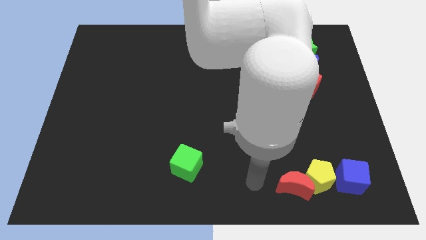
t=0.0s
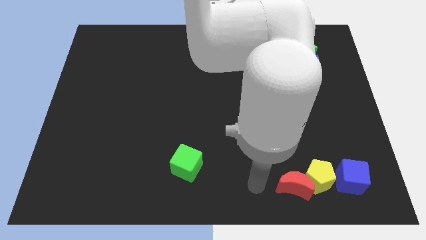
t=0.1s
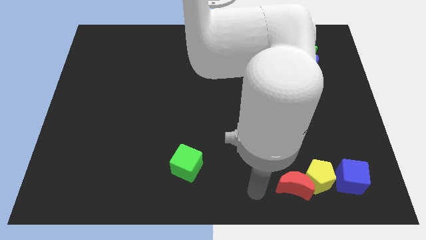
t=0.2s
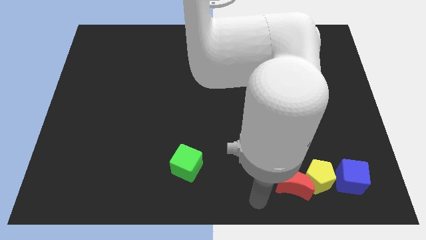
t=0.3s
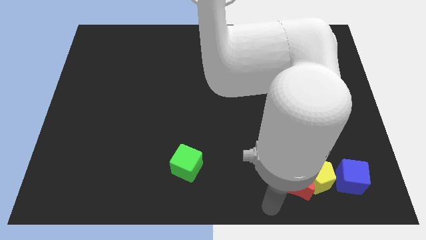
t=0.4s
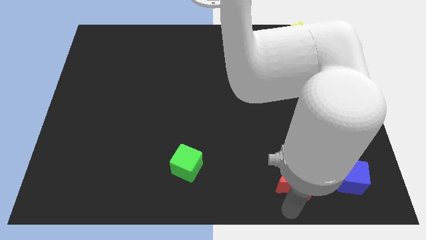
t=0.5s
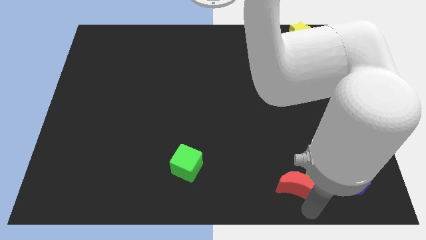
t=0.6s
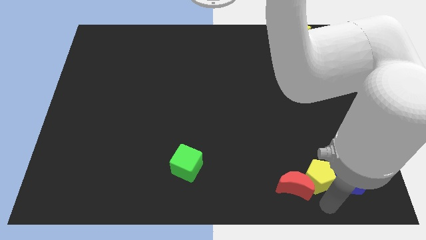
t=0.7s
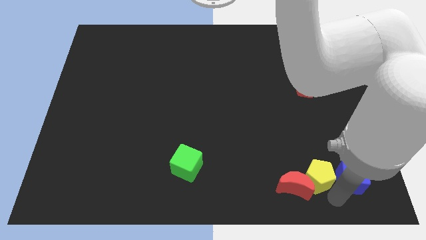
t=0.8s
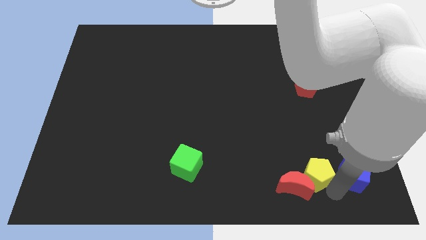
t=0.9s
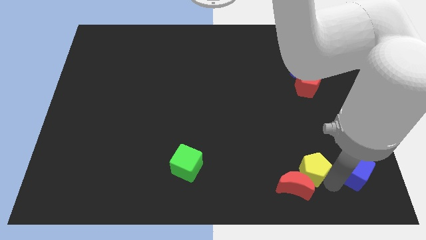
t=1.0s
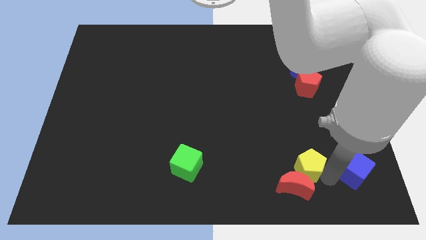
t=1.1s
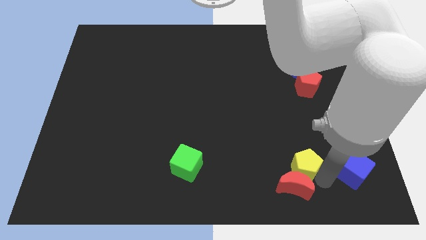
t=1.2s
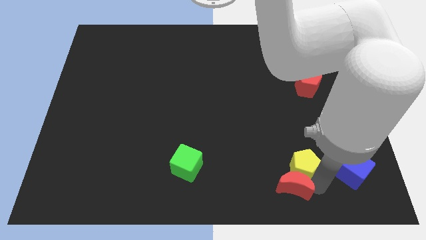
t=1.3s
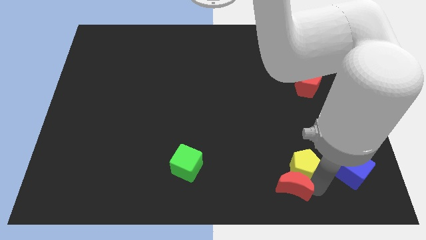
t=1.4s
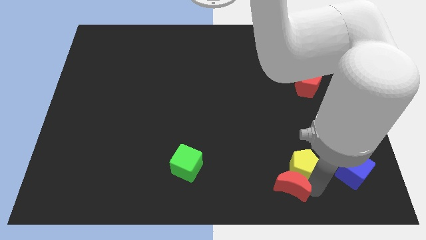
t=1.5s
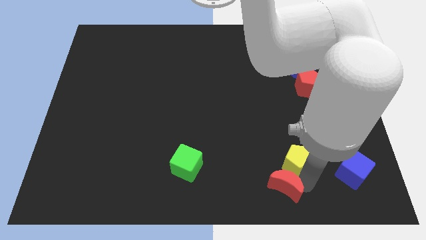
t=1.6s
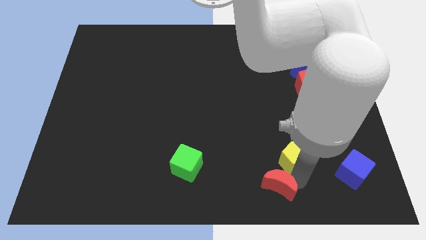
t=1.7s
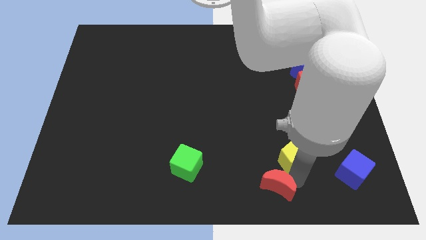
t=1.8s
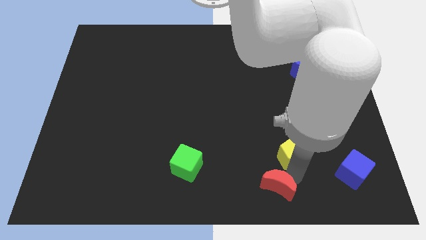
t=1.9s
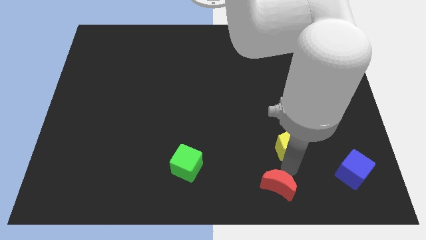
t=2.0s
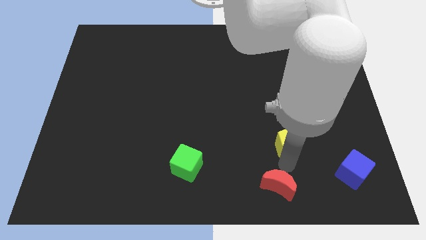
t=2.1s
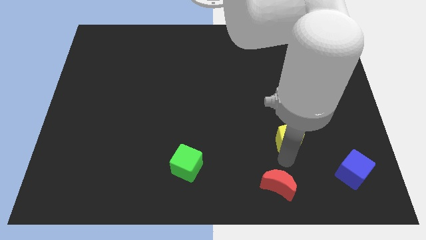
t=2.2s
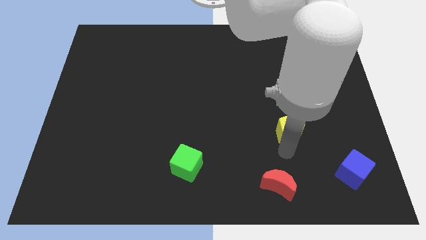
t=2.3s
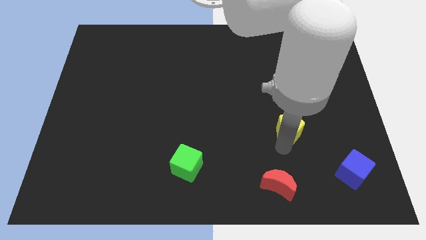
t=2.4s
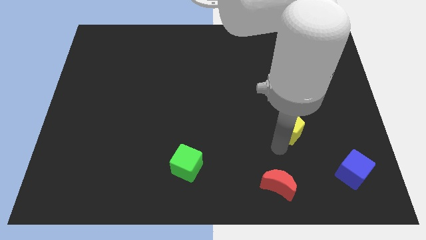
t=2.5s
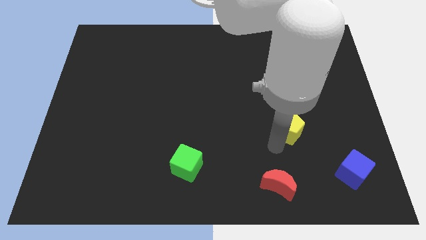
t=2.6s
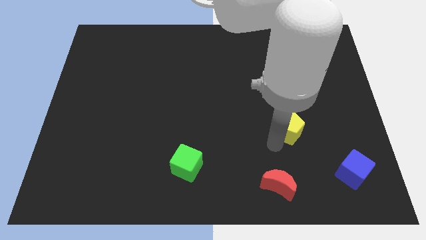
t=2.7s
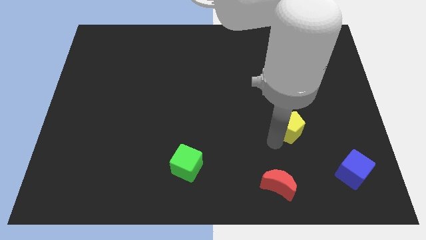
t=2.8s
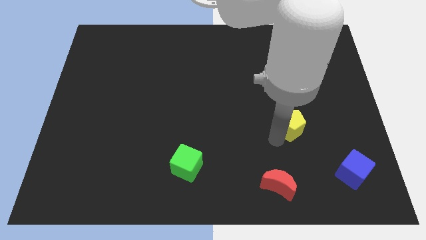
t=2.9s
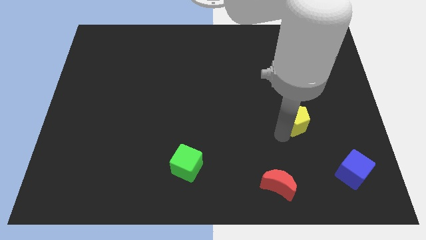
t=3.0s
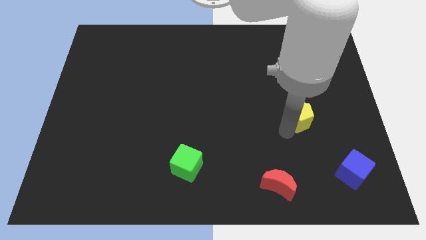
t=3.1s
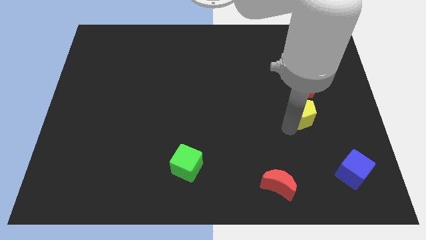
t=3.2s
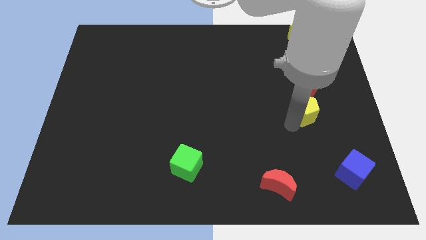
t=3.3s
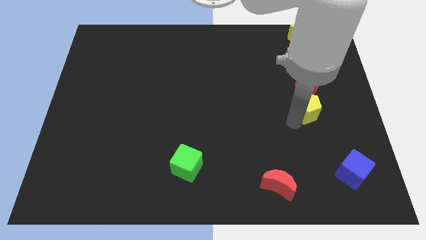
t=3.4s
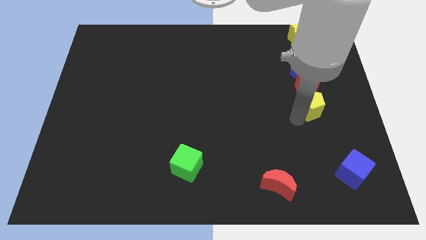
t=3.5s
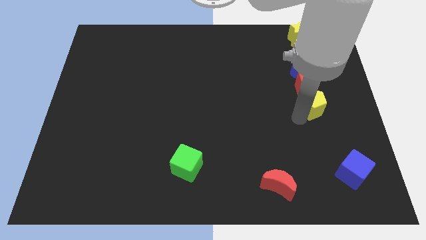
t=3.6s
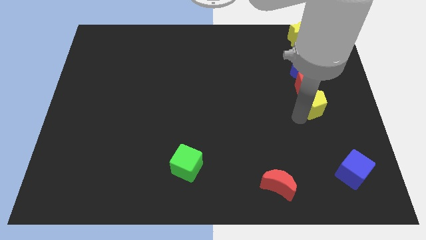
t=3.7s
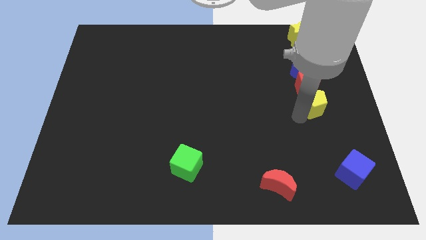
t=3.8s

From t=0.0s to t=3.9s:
separate the yellow pentagon from the red moon

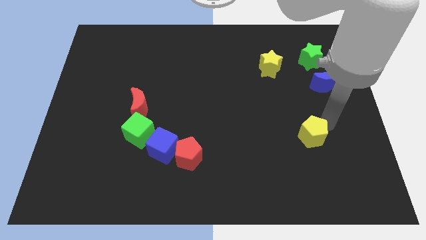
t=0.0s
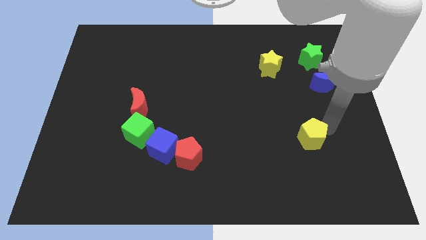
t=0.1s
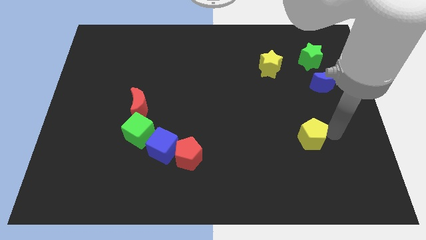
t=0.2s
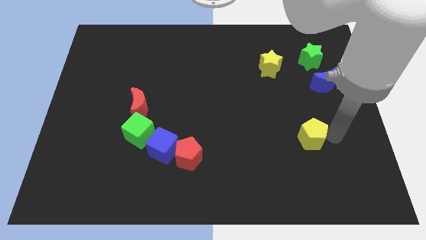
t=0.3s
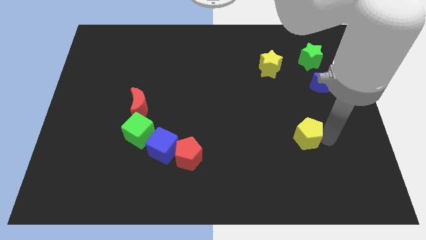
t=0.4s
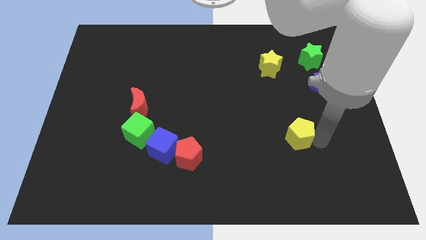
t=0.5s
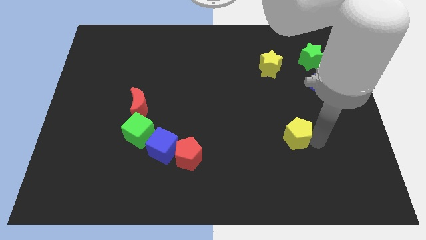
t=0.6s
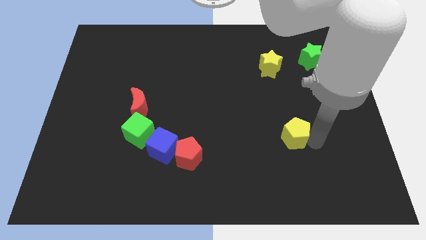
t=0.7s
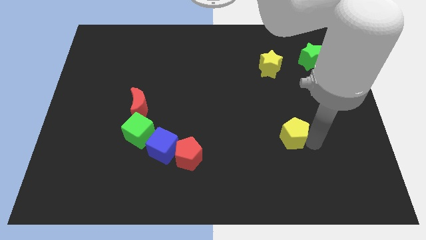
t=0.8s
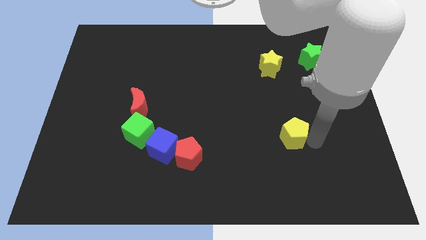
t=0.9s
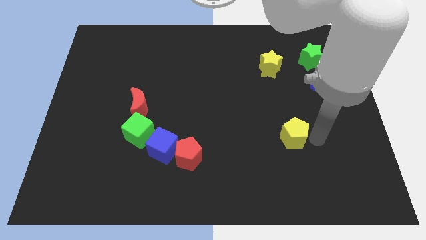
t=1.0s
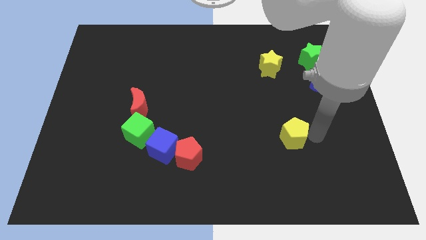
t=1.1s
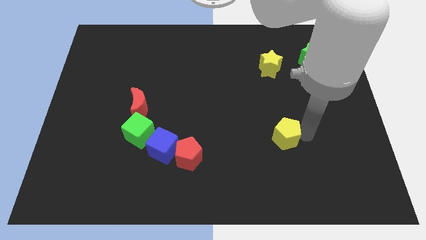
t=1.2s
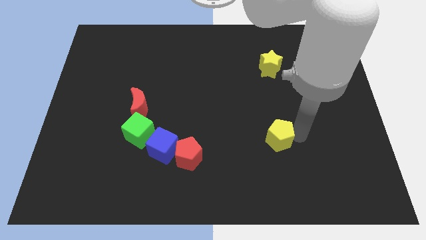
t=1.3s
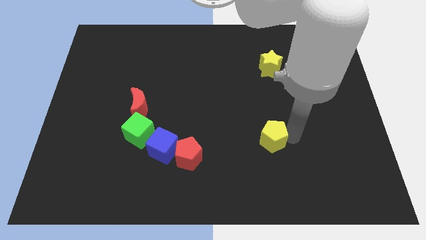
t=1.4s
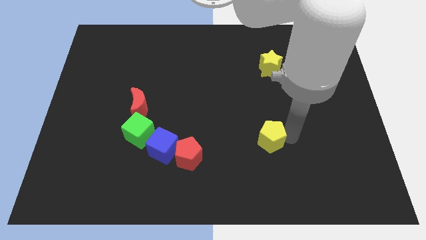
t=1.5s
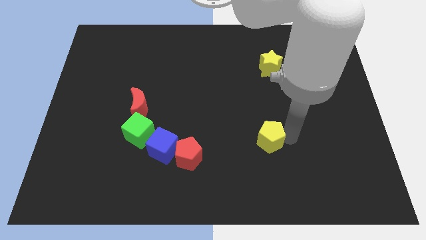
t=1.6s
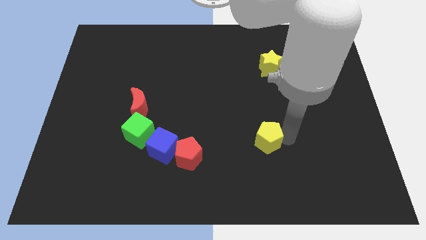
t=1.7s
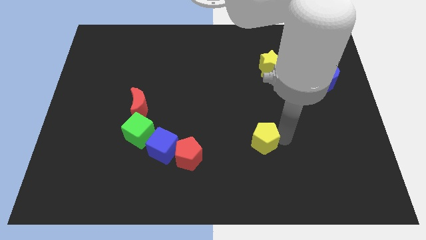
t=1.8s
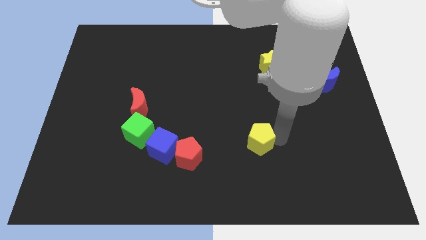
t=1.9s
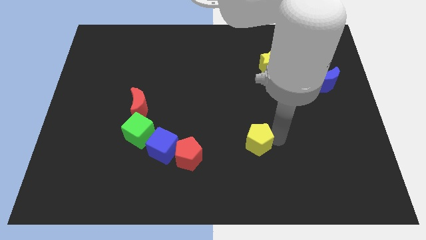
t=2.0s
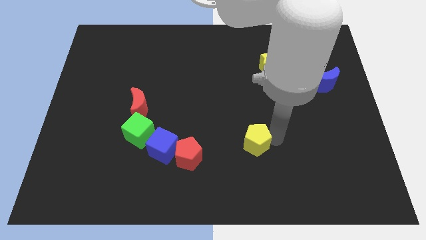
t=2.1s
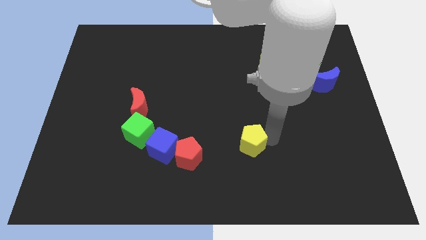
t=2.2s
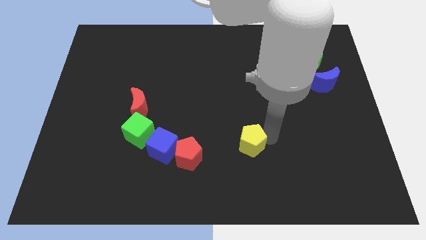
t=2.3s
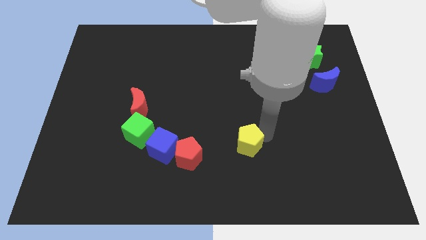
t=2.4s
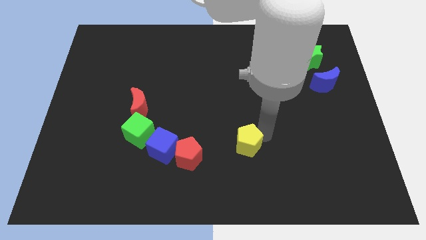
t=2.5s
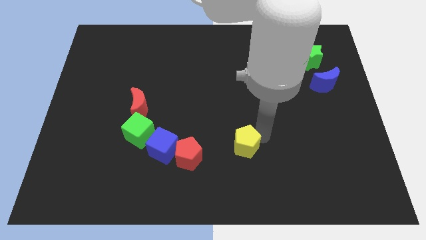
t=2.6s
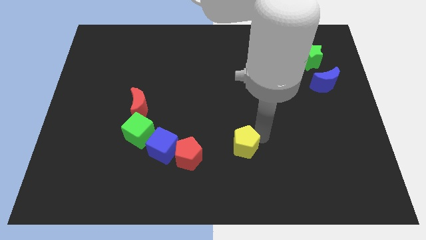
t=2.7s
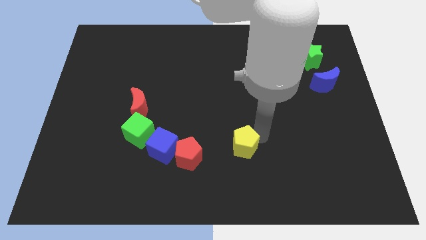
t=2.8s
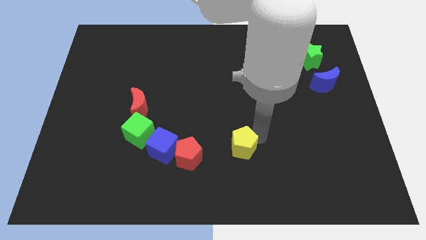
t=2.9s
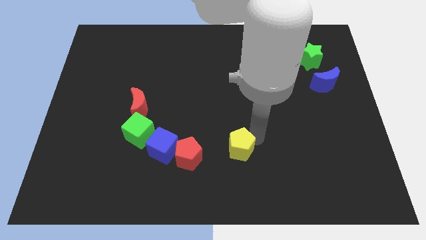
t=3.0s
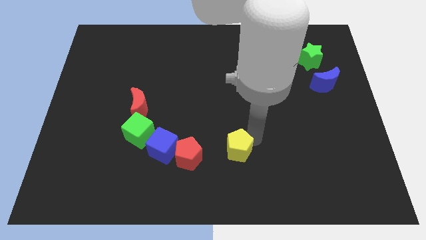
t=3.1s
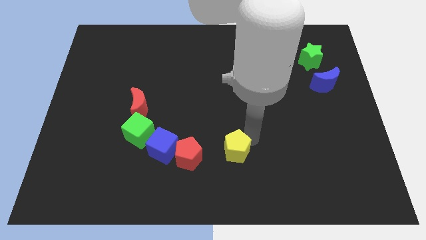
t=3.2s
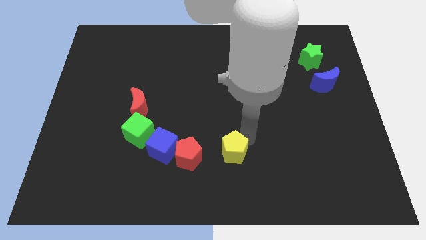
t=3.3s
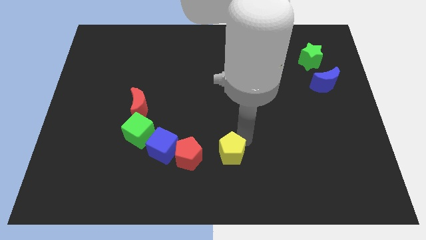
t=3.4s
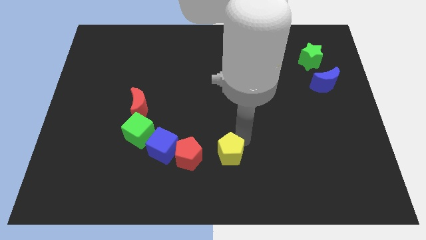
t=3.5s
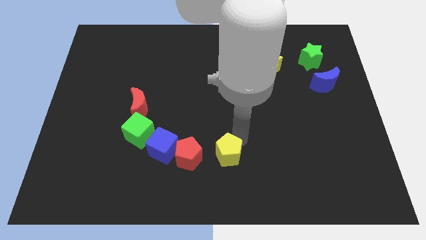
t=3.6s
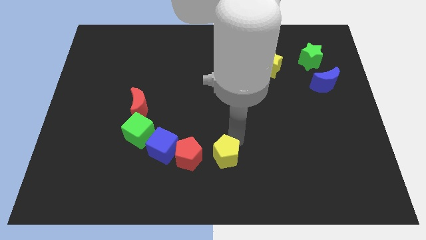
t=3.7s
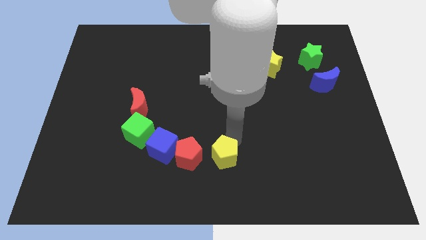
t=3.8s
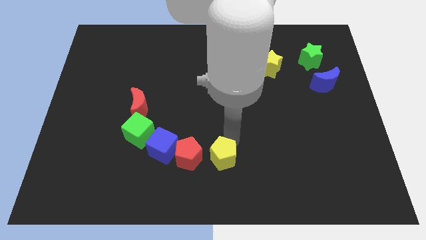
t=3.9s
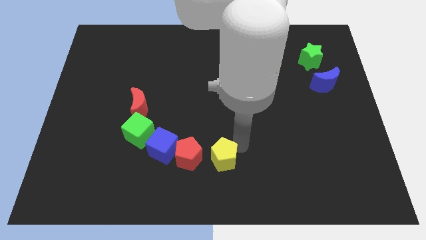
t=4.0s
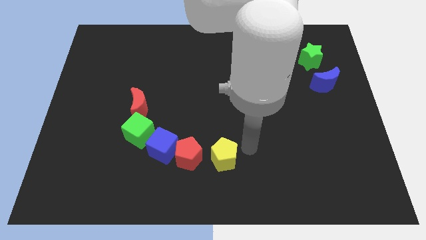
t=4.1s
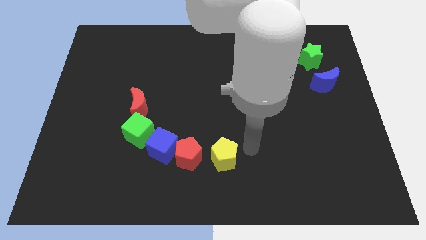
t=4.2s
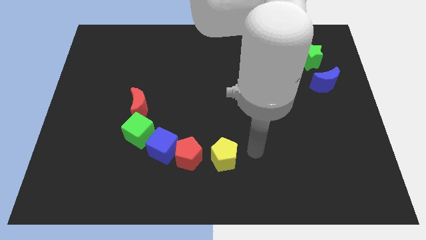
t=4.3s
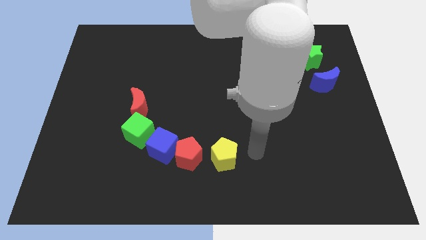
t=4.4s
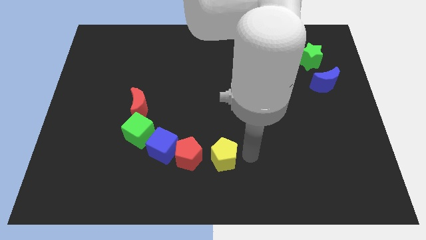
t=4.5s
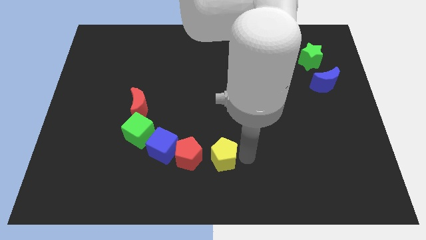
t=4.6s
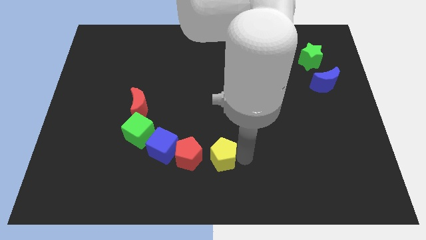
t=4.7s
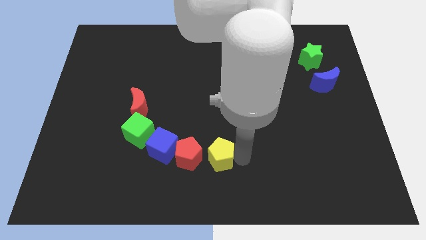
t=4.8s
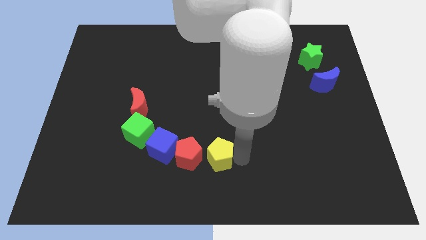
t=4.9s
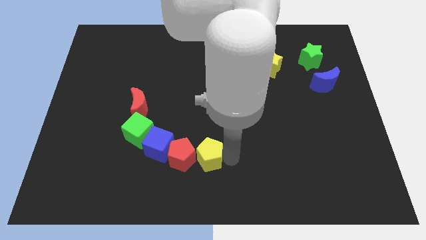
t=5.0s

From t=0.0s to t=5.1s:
slide yellow pentagon close to red pentagon
